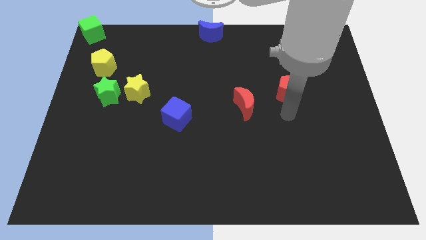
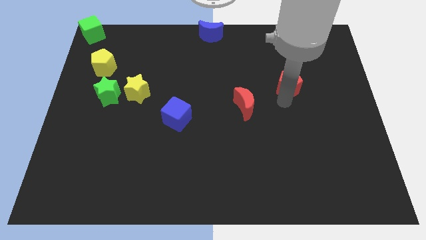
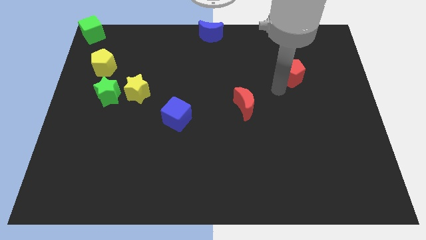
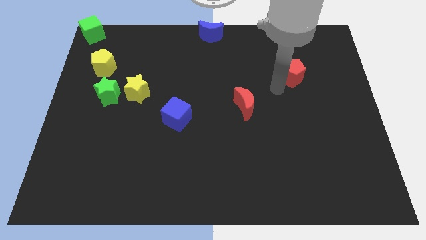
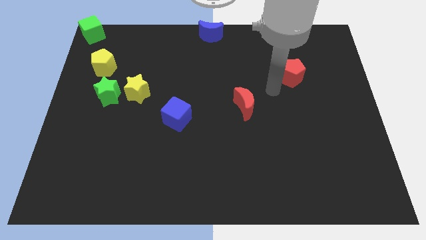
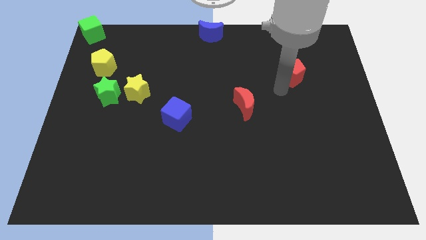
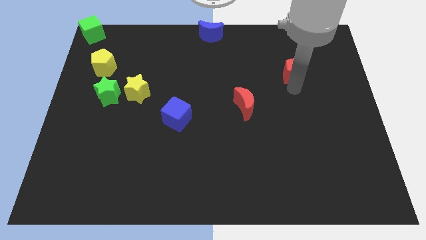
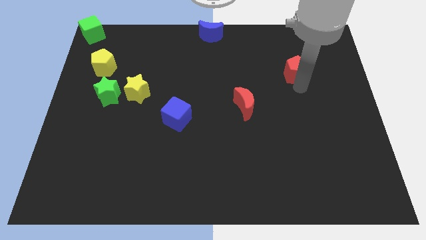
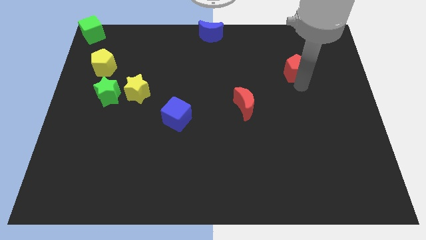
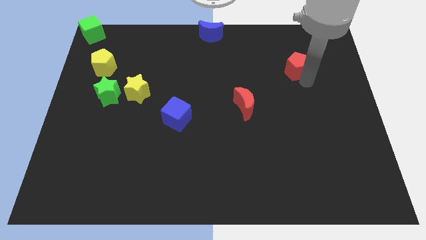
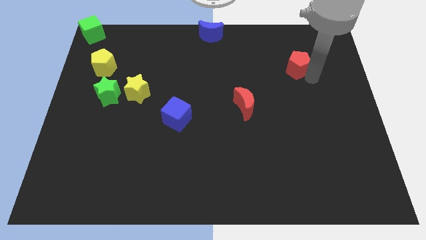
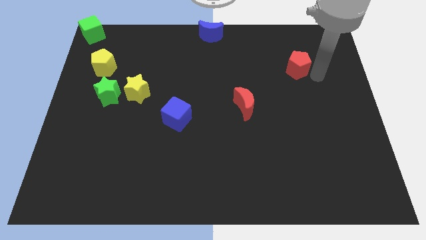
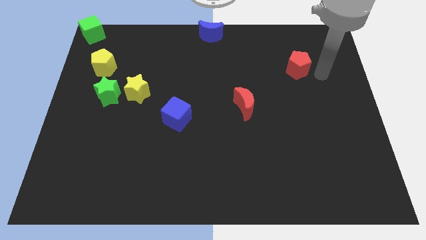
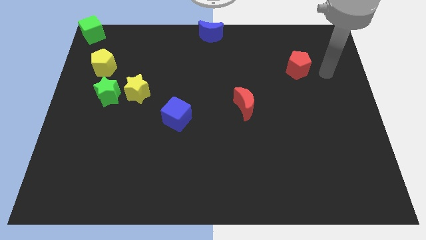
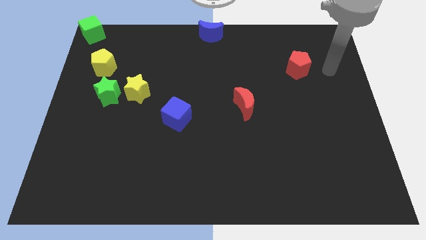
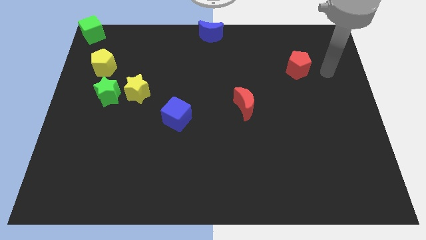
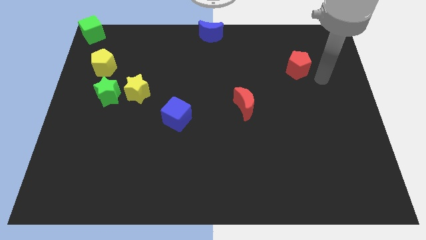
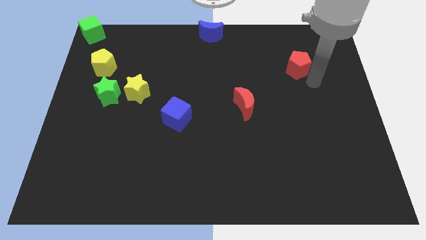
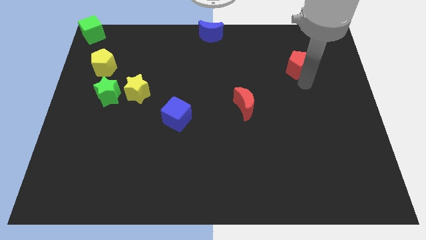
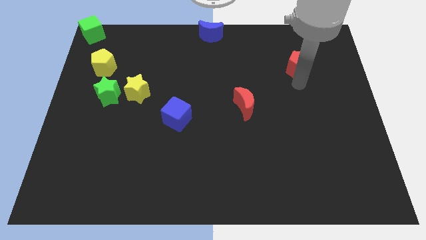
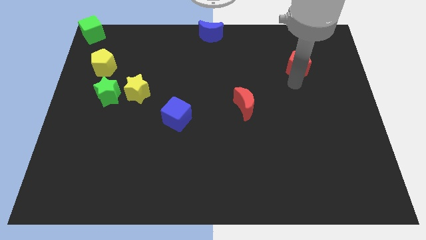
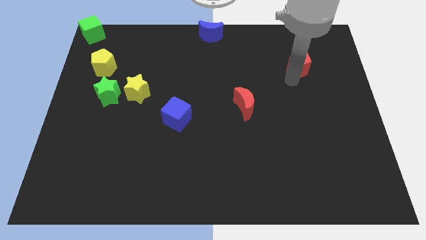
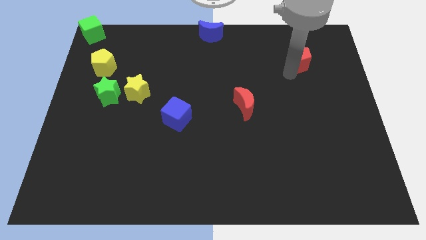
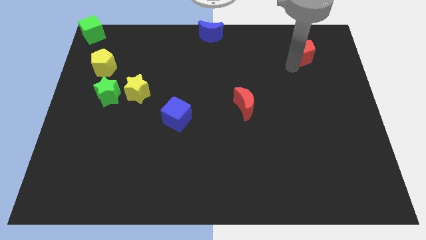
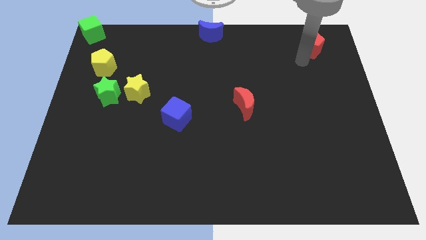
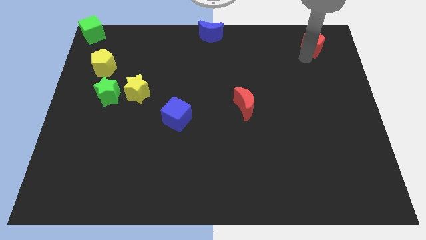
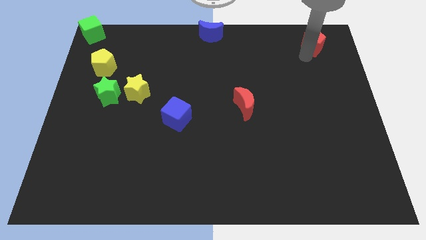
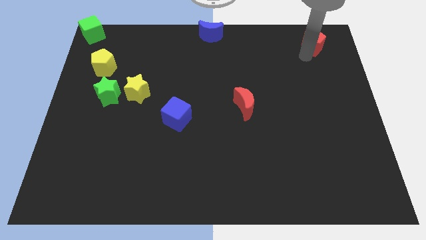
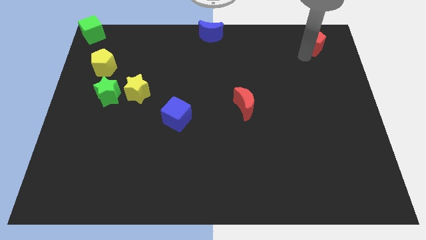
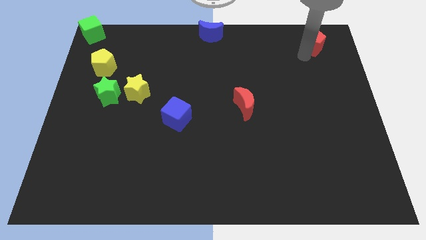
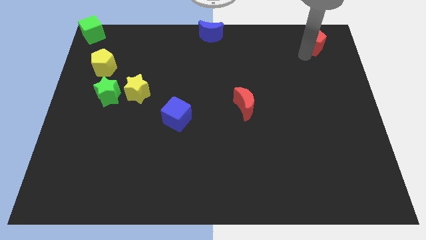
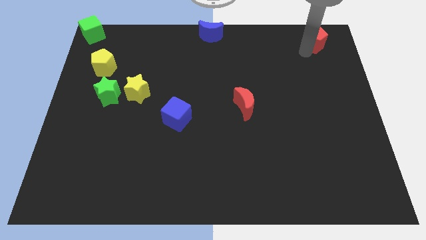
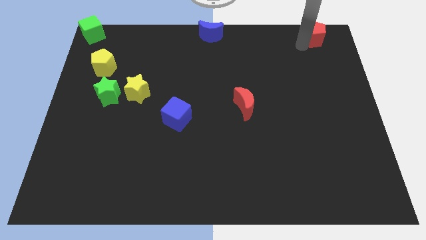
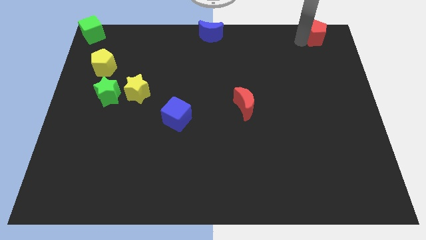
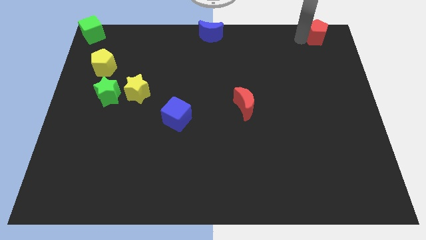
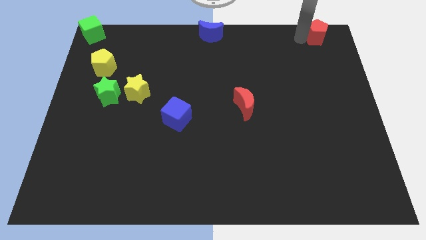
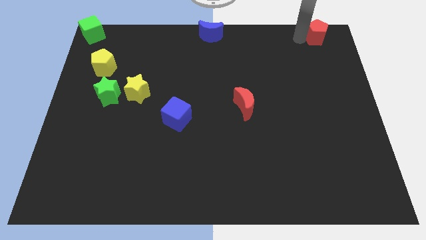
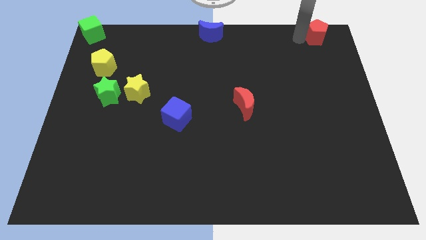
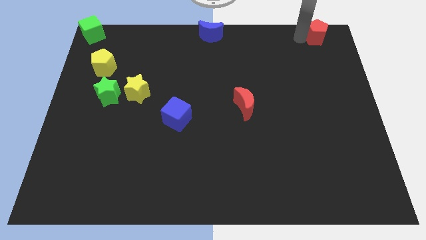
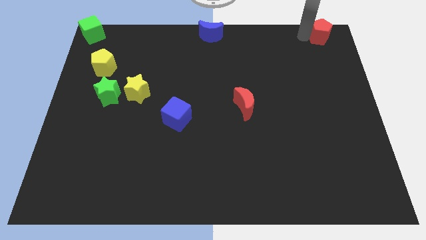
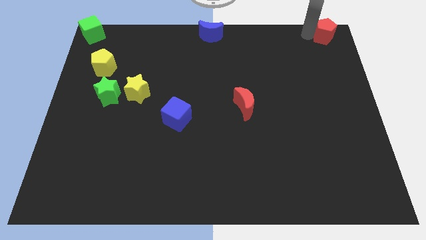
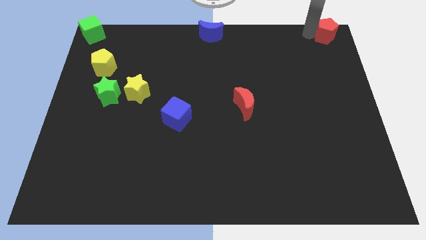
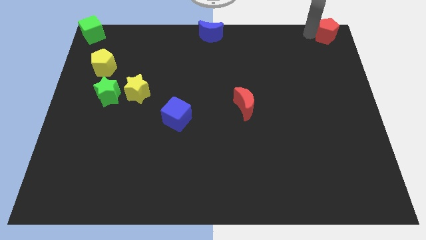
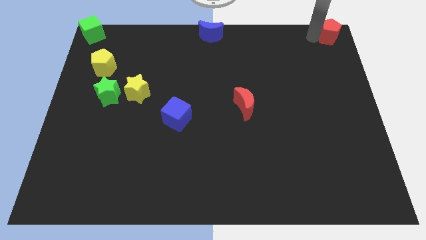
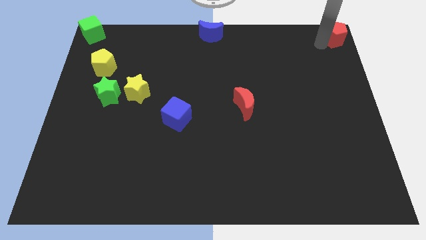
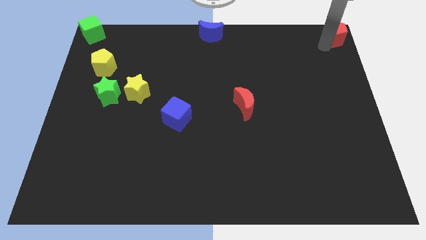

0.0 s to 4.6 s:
move the red pentagon to the top right

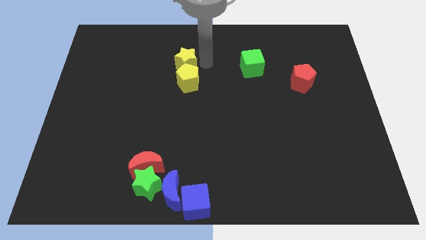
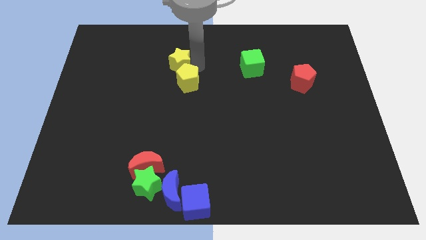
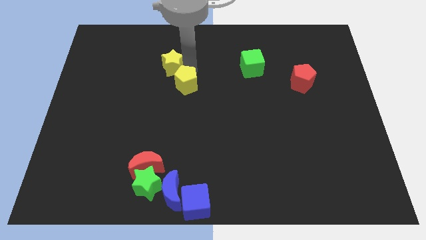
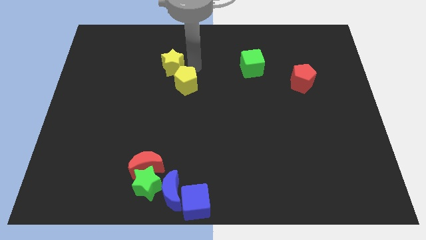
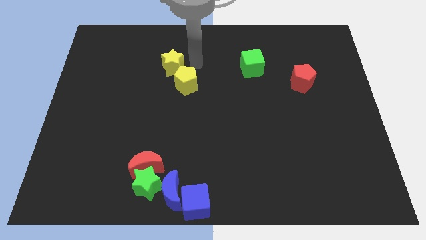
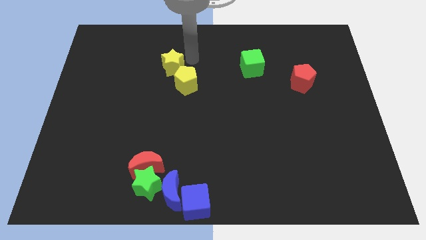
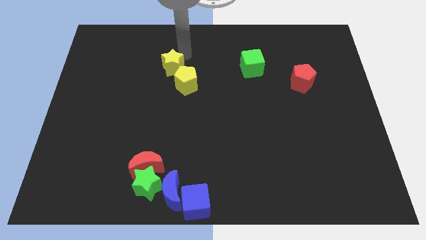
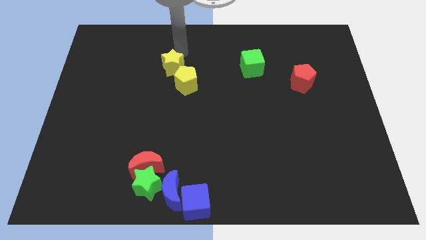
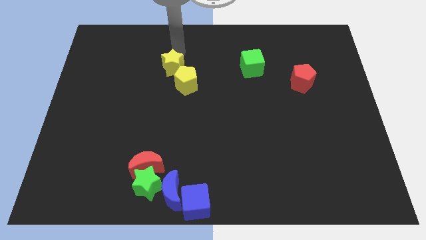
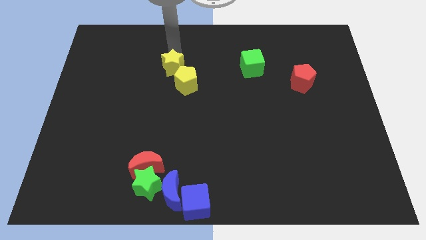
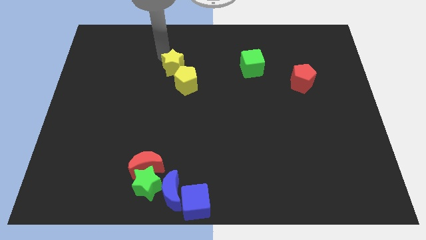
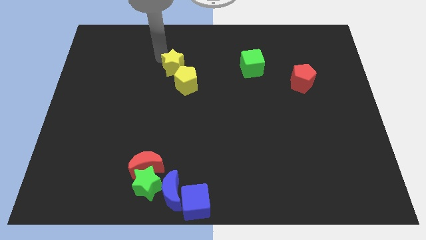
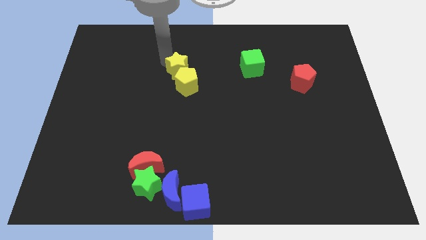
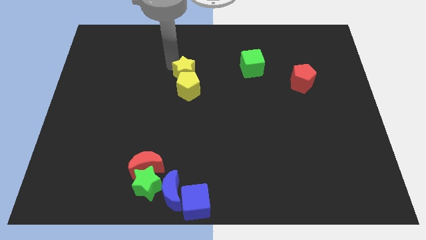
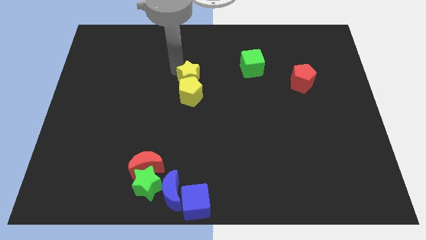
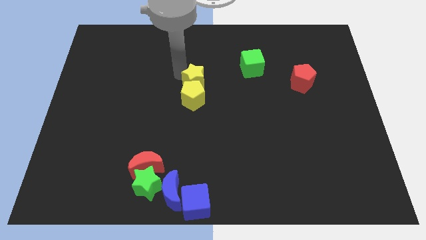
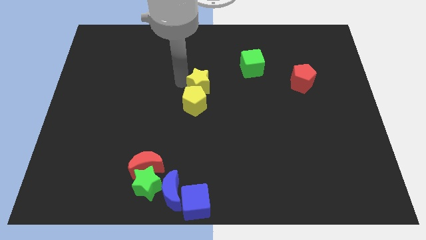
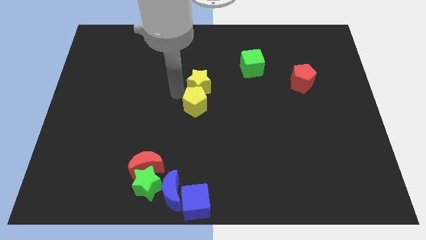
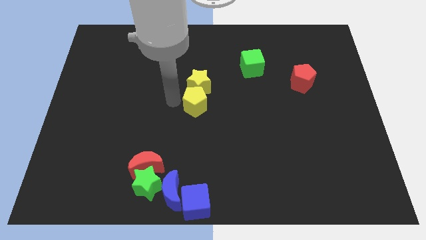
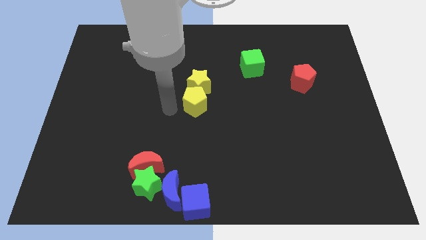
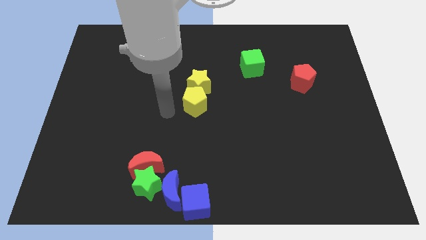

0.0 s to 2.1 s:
slightly push the yellow star along with the yellow pentagon towards the center of the board

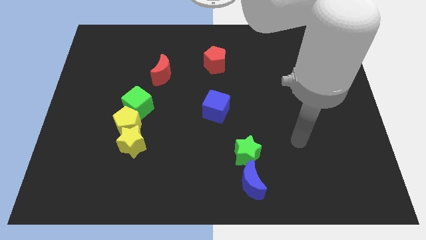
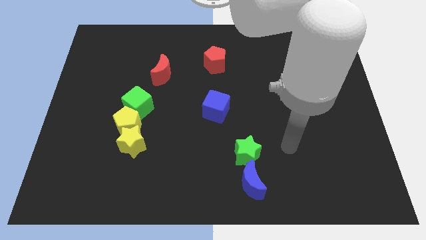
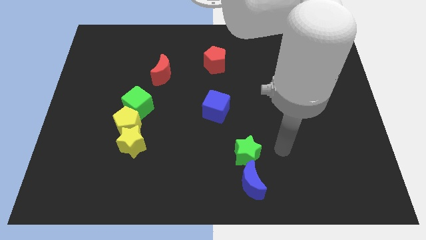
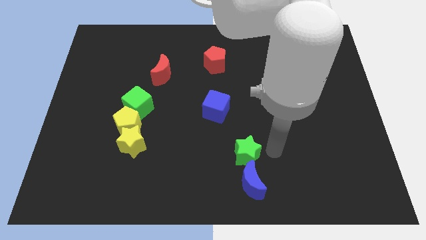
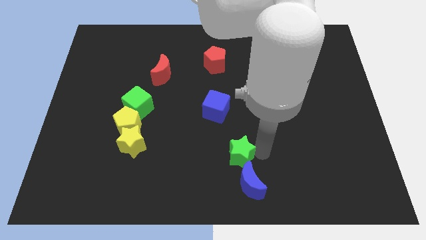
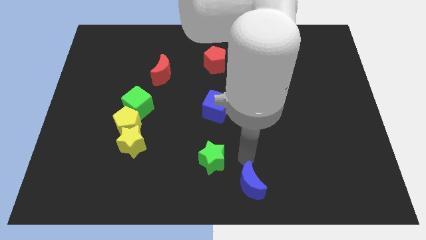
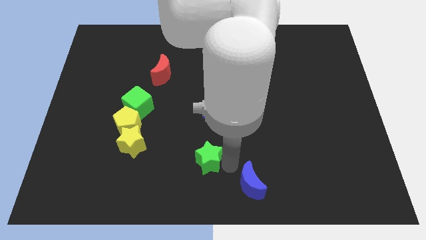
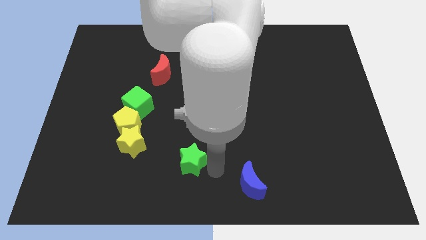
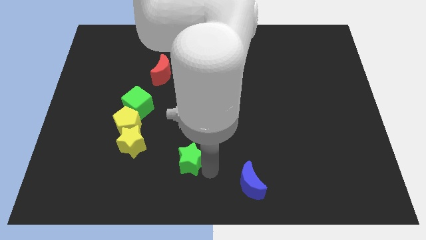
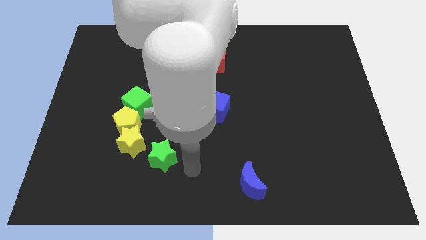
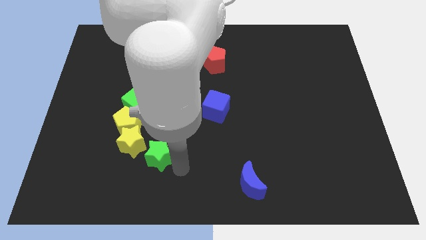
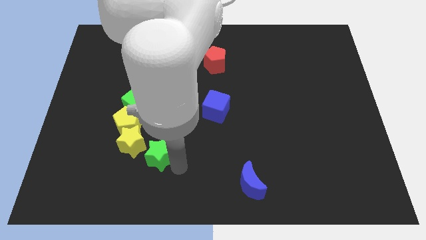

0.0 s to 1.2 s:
separate the green star from blue crescent

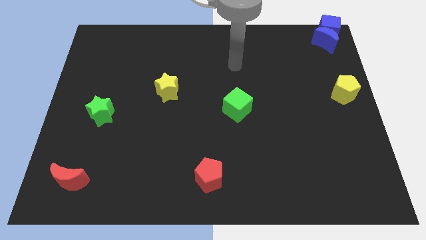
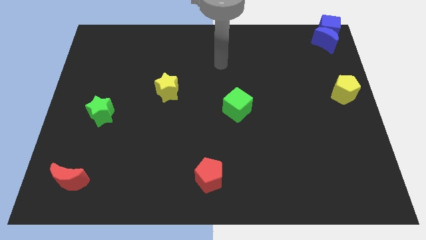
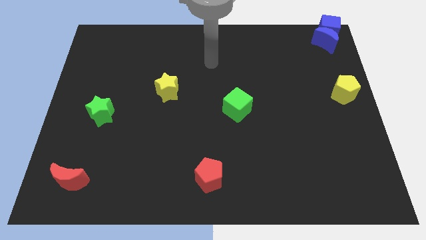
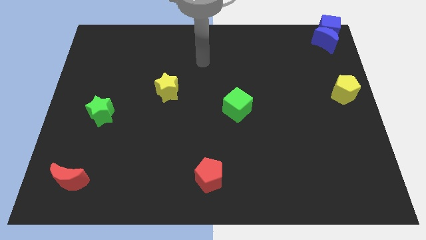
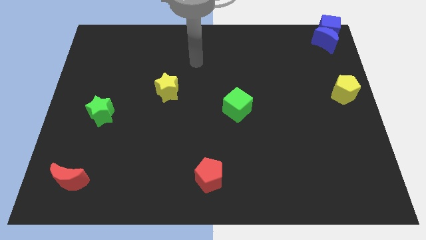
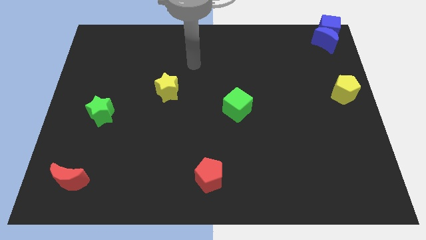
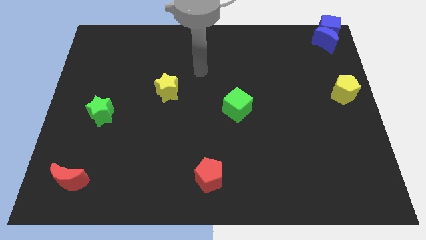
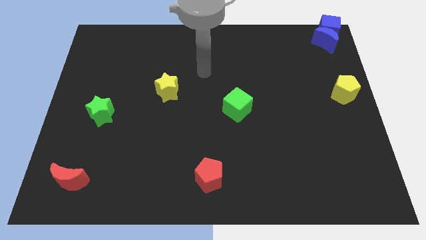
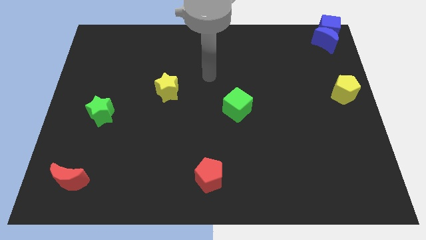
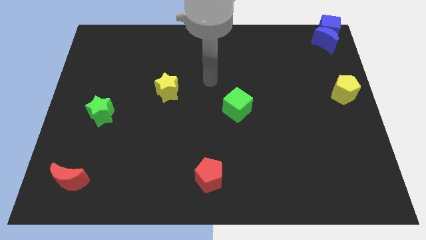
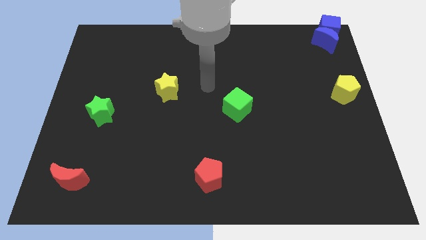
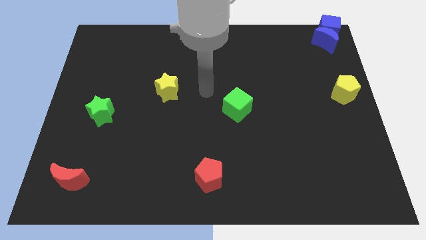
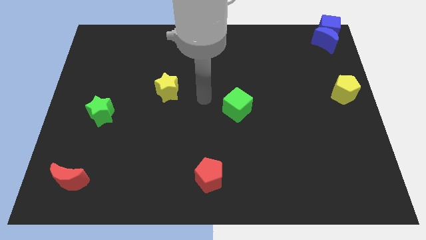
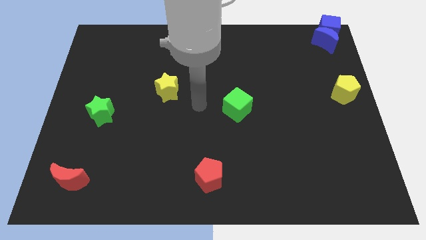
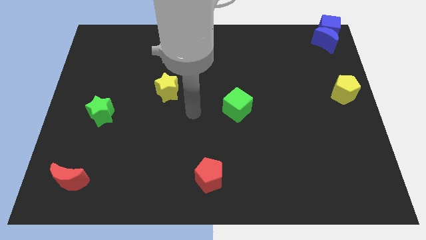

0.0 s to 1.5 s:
place your arm to the center of the board
